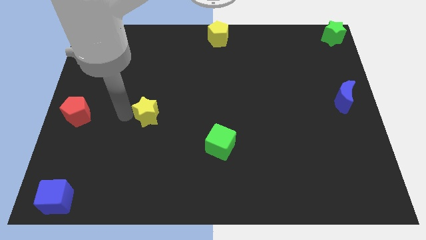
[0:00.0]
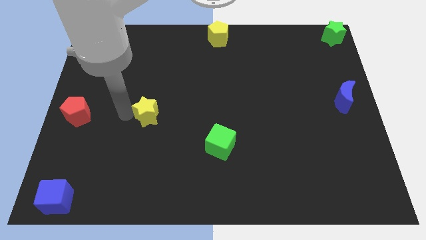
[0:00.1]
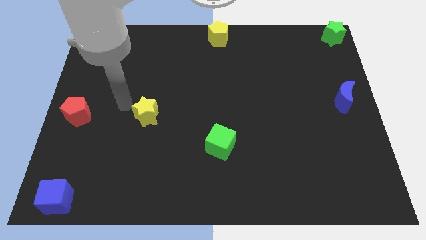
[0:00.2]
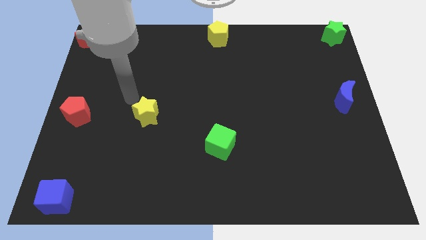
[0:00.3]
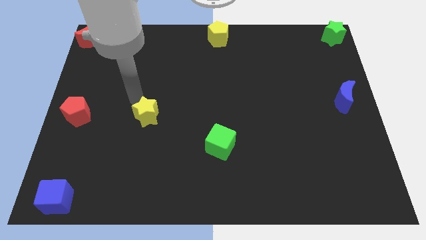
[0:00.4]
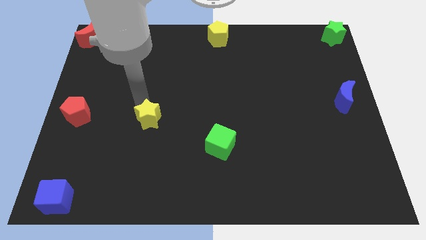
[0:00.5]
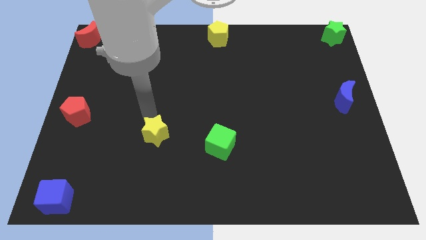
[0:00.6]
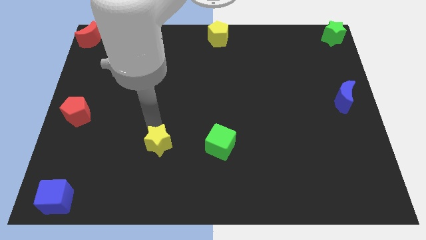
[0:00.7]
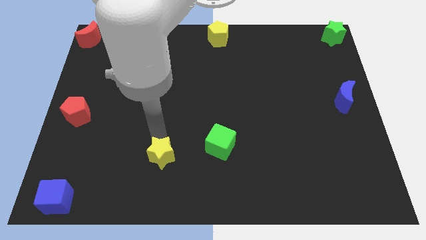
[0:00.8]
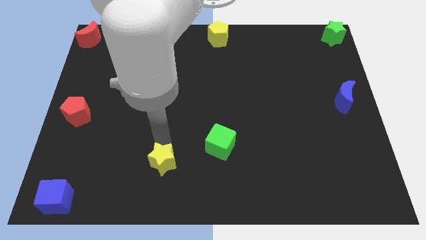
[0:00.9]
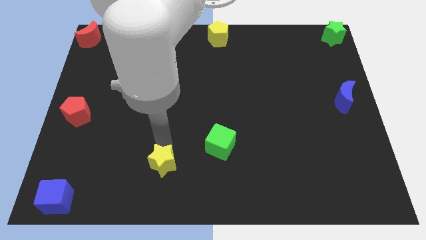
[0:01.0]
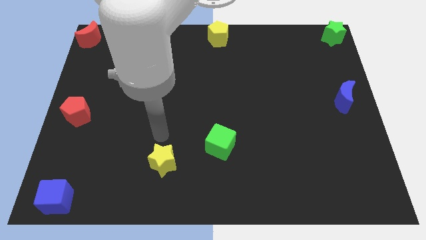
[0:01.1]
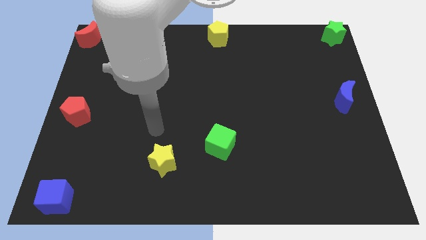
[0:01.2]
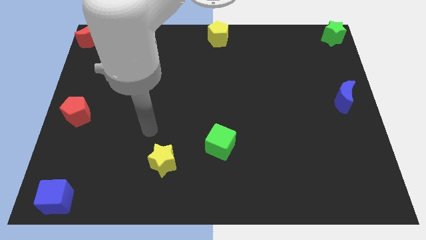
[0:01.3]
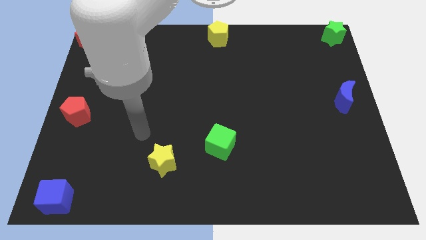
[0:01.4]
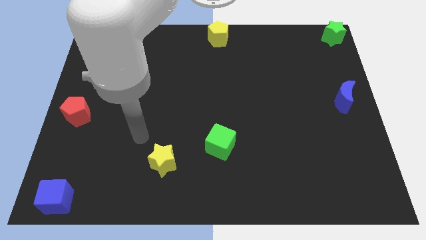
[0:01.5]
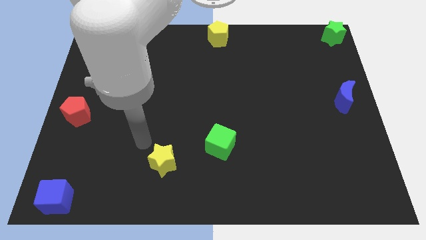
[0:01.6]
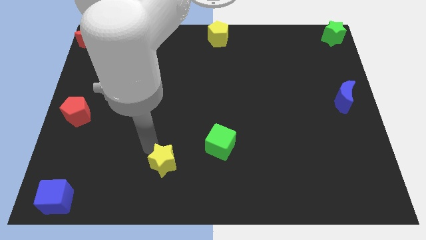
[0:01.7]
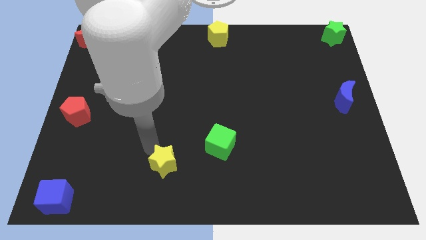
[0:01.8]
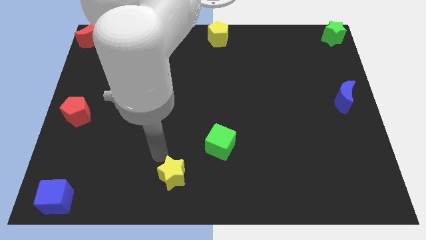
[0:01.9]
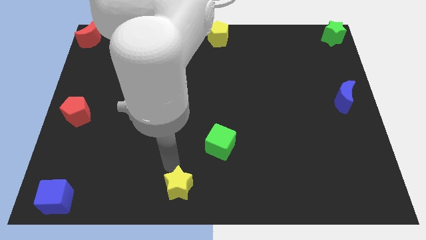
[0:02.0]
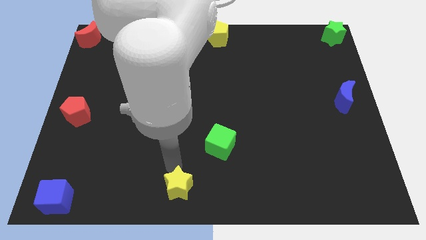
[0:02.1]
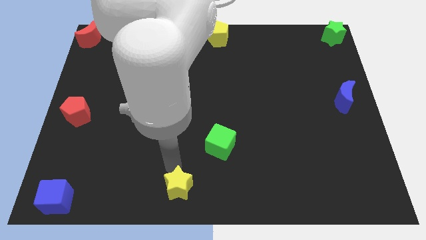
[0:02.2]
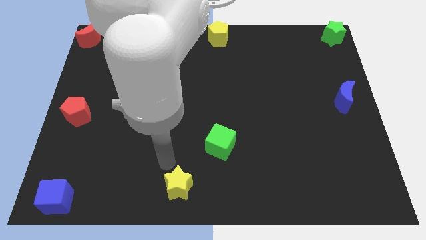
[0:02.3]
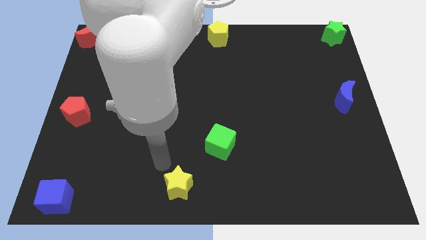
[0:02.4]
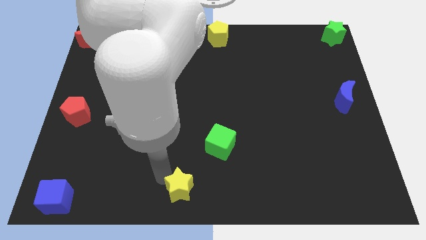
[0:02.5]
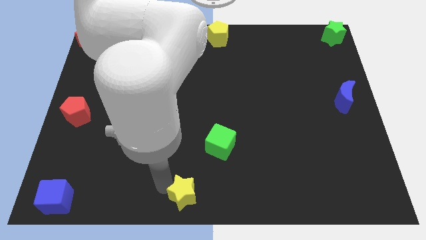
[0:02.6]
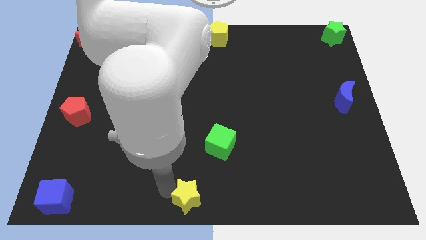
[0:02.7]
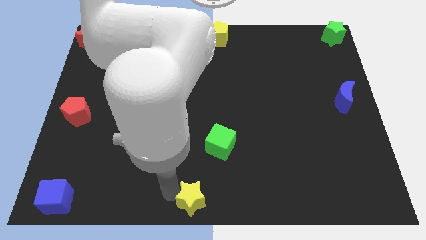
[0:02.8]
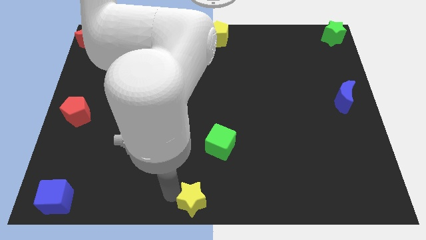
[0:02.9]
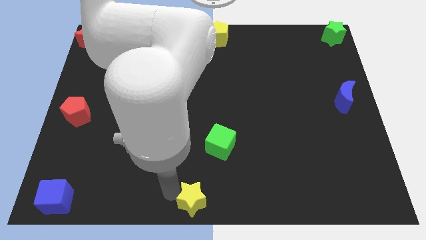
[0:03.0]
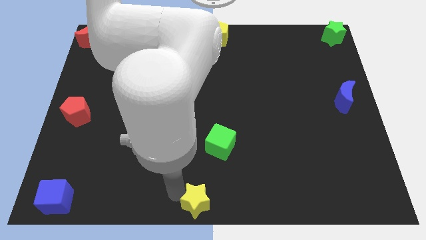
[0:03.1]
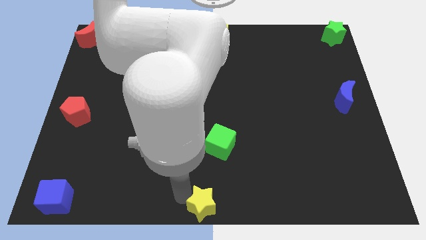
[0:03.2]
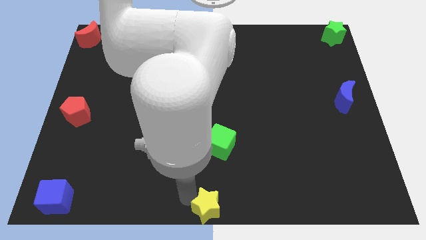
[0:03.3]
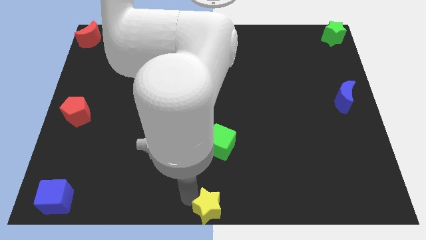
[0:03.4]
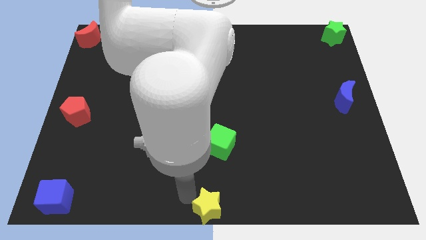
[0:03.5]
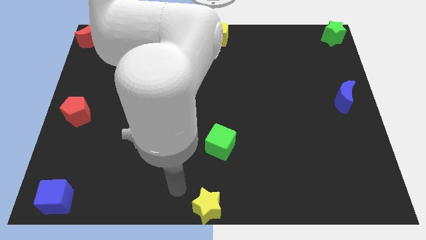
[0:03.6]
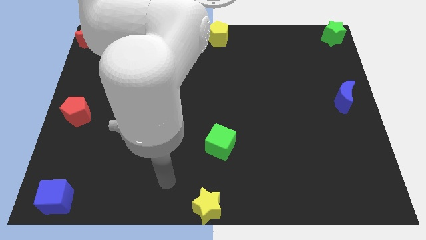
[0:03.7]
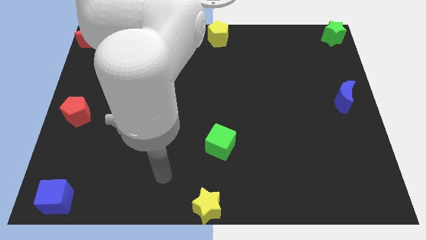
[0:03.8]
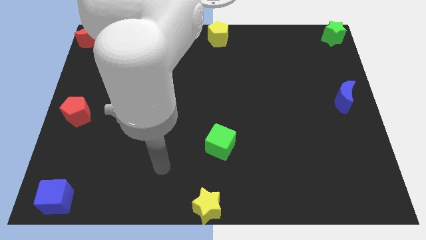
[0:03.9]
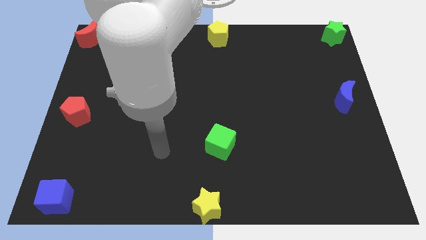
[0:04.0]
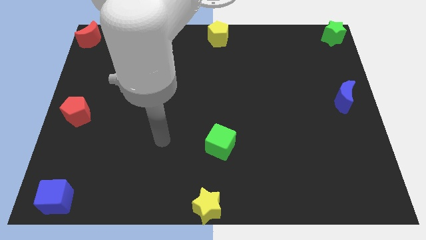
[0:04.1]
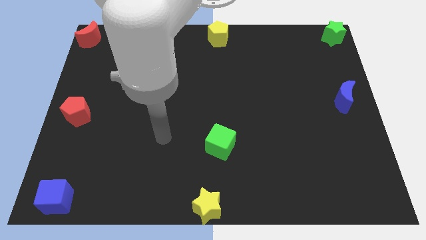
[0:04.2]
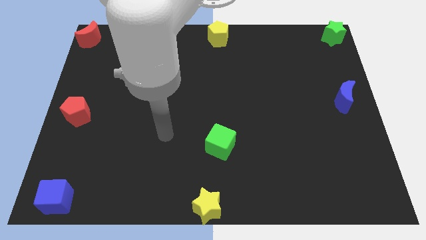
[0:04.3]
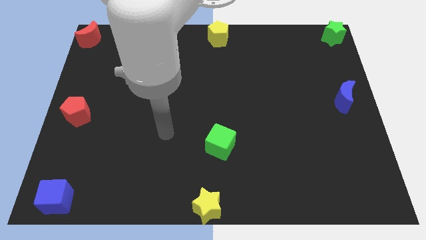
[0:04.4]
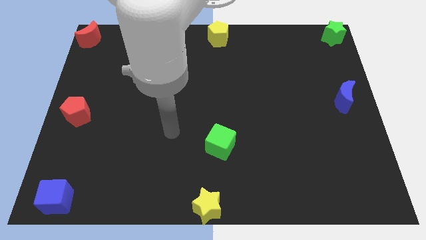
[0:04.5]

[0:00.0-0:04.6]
push the yellow star to the bottom center of the board

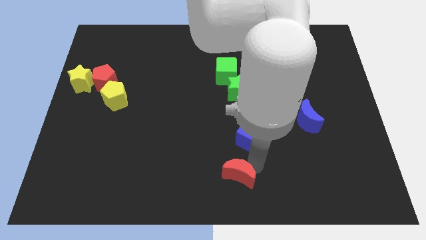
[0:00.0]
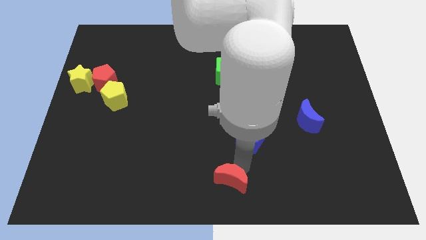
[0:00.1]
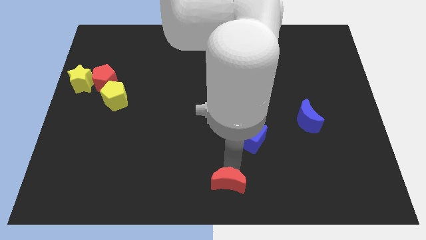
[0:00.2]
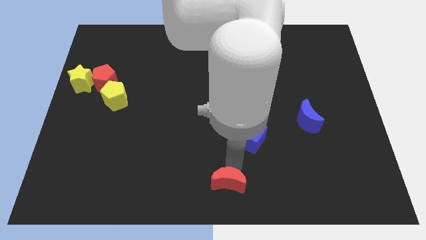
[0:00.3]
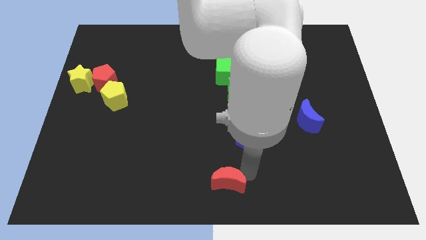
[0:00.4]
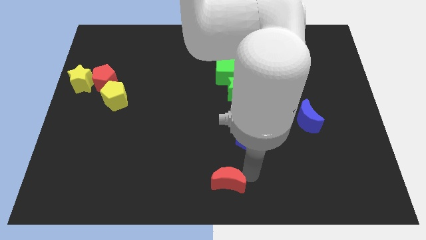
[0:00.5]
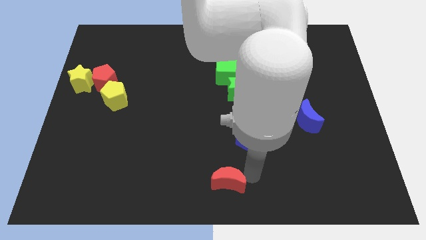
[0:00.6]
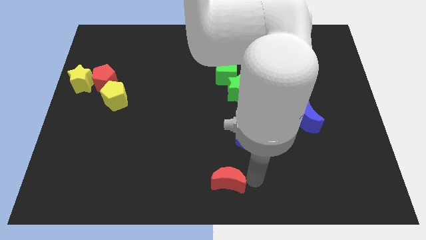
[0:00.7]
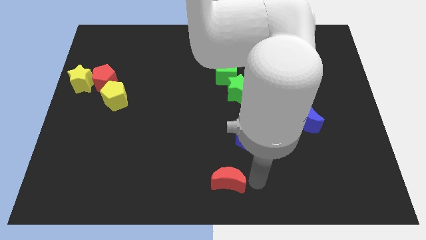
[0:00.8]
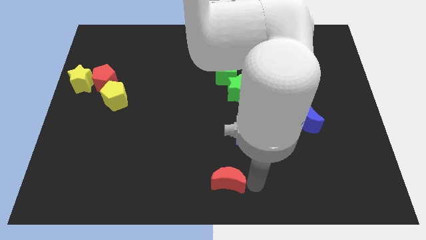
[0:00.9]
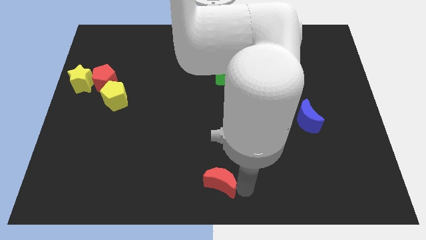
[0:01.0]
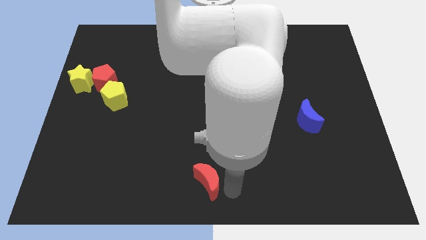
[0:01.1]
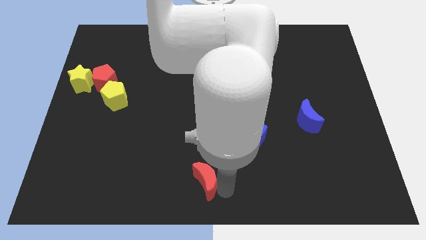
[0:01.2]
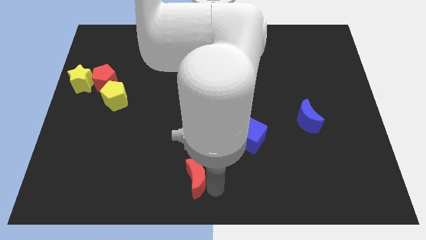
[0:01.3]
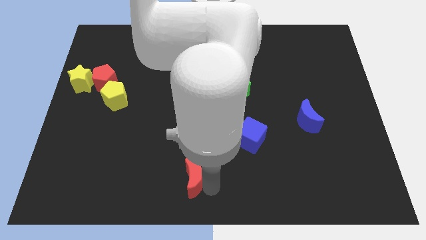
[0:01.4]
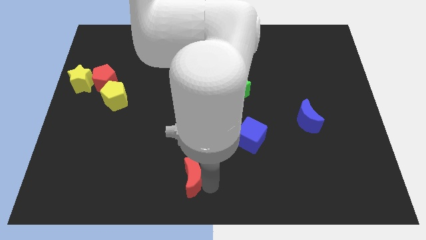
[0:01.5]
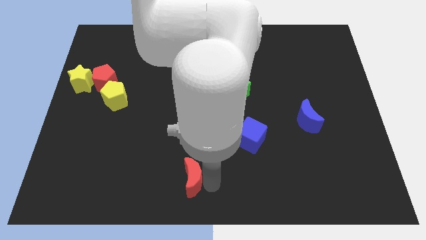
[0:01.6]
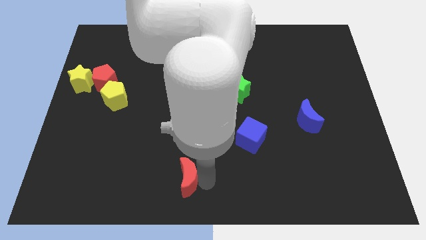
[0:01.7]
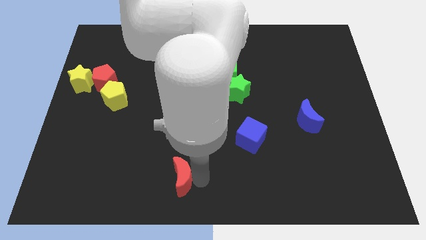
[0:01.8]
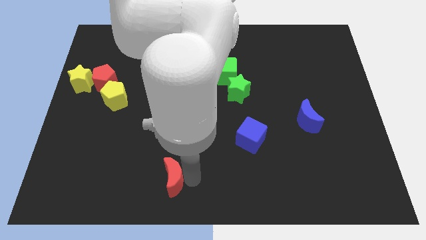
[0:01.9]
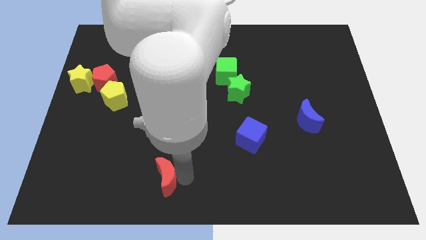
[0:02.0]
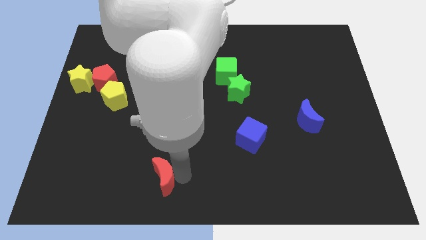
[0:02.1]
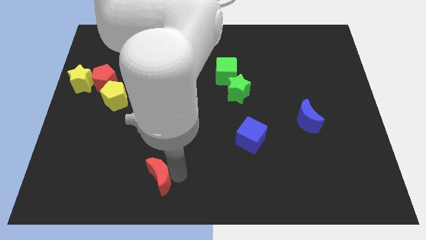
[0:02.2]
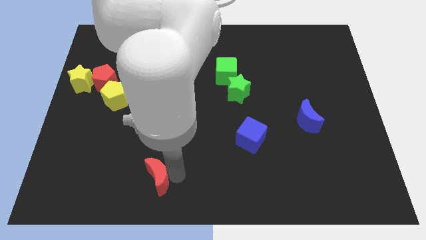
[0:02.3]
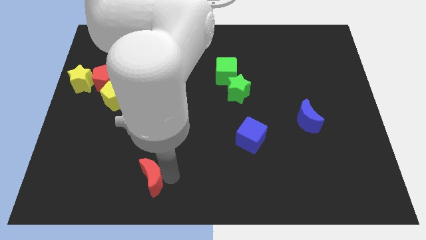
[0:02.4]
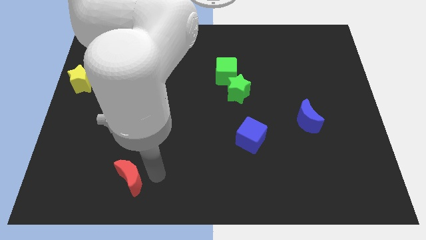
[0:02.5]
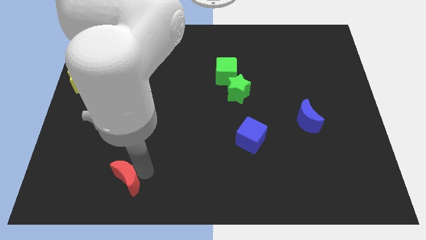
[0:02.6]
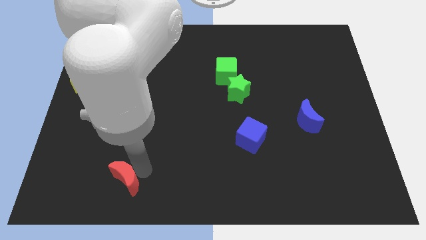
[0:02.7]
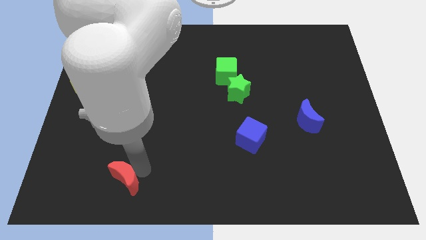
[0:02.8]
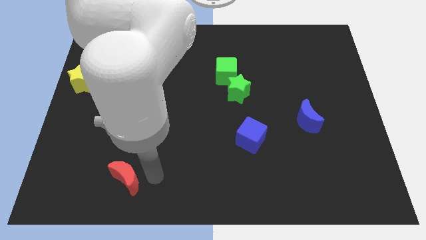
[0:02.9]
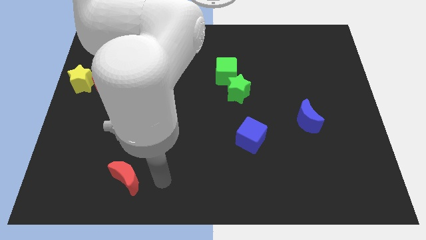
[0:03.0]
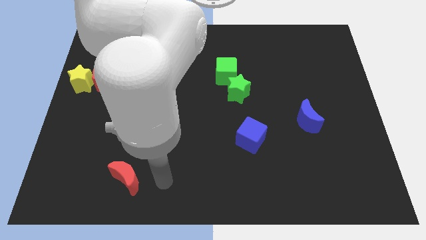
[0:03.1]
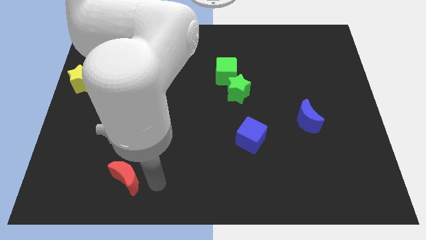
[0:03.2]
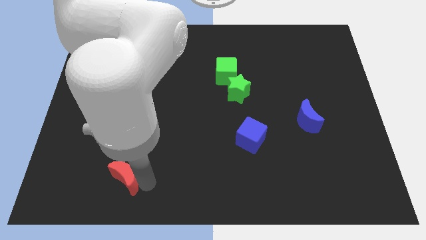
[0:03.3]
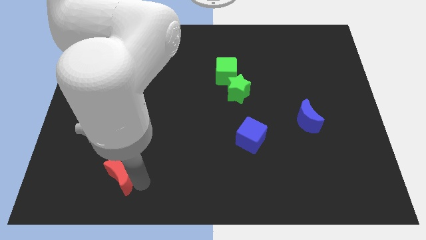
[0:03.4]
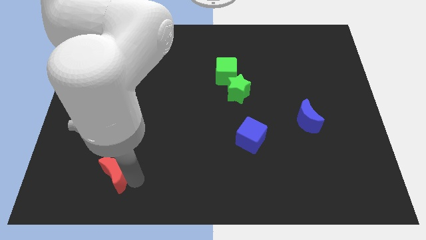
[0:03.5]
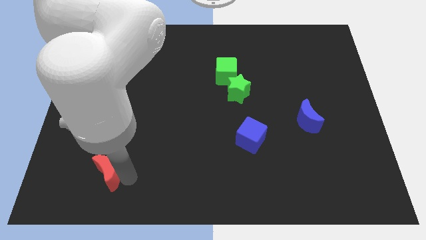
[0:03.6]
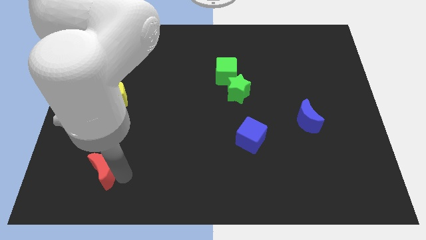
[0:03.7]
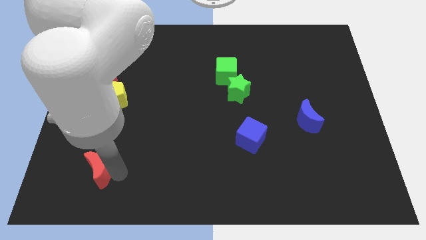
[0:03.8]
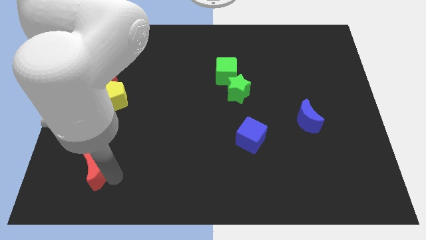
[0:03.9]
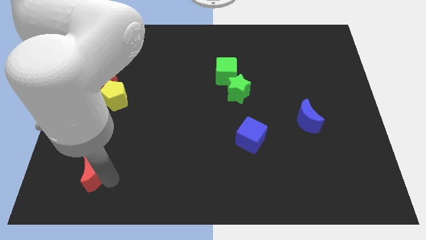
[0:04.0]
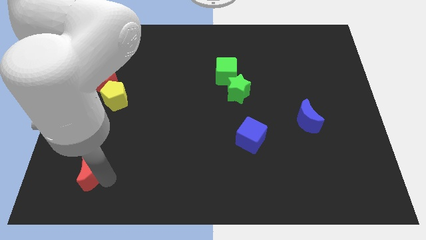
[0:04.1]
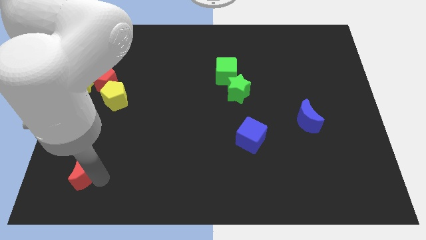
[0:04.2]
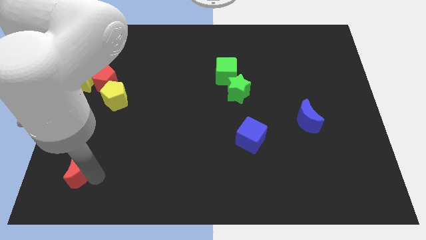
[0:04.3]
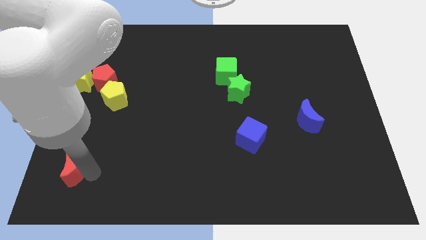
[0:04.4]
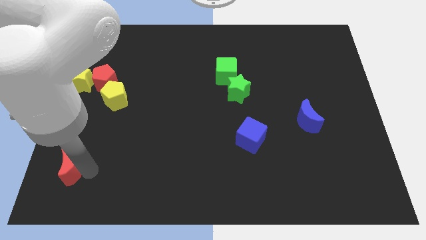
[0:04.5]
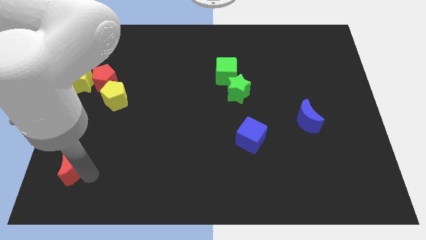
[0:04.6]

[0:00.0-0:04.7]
push the red moon towards the bottom left side of the board
